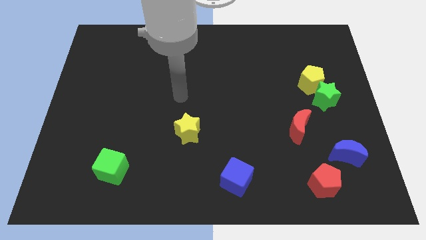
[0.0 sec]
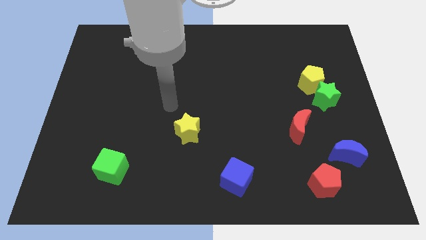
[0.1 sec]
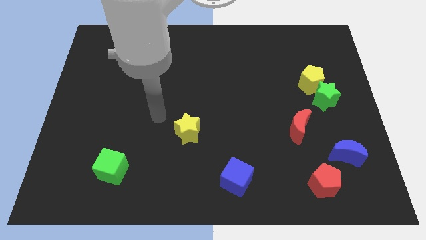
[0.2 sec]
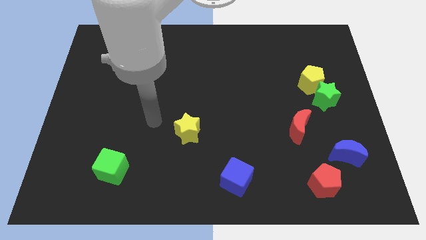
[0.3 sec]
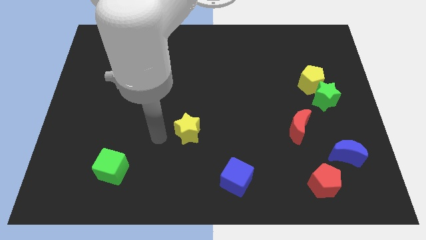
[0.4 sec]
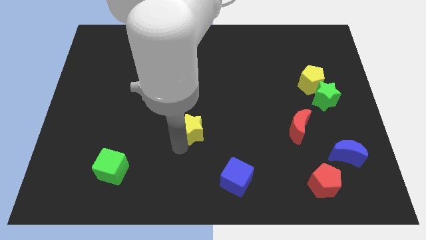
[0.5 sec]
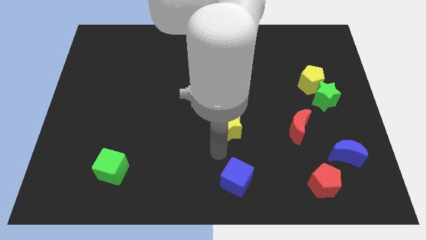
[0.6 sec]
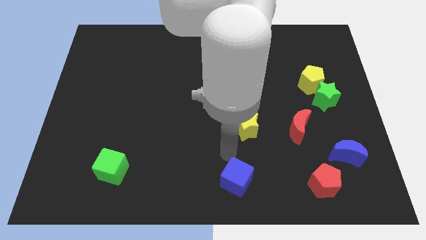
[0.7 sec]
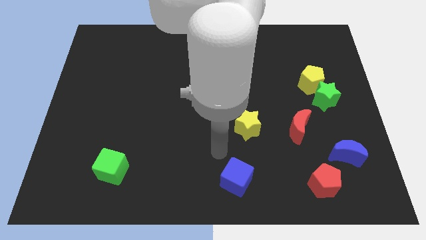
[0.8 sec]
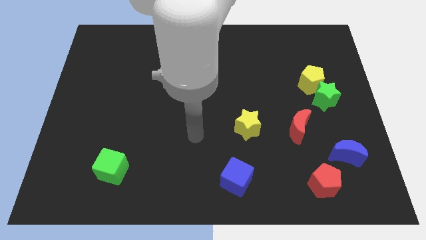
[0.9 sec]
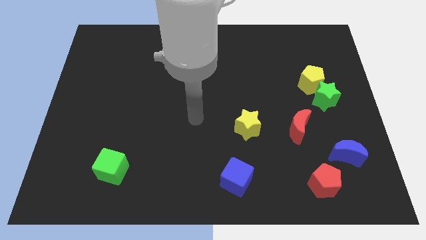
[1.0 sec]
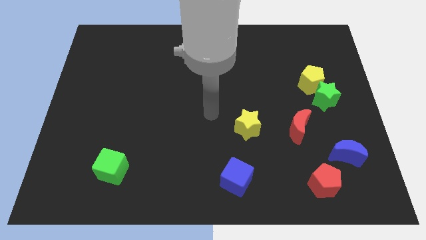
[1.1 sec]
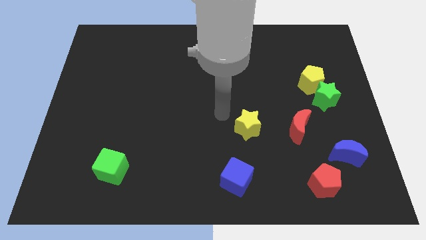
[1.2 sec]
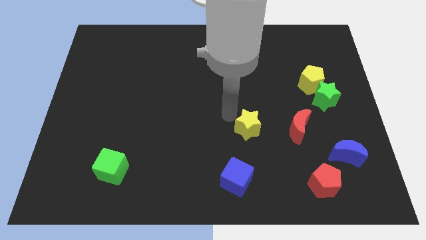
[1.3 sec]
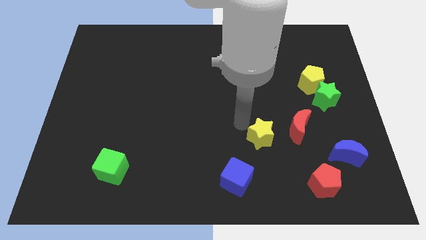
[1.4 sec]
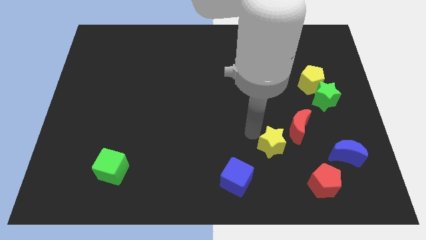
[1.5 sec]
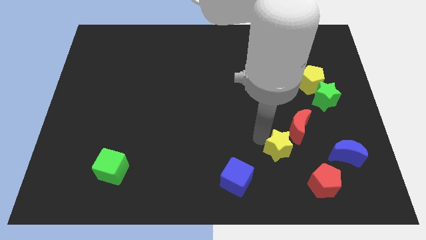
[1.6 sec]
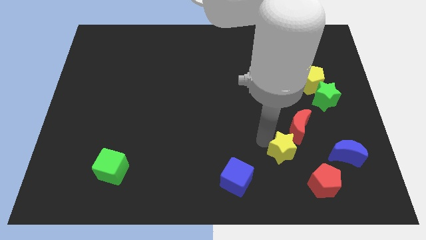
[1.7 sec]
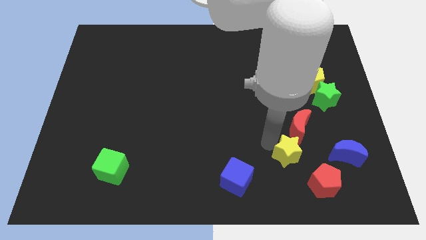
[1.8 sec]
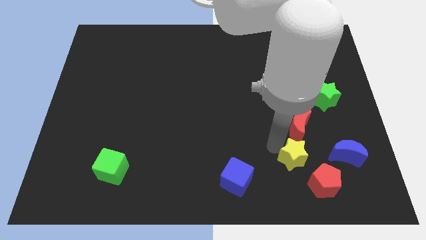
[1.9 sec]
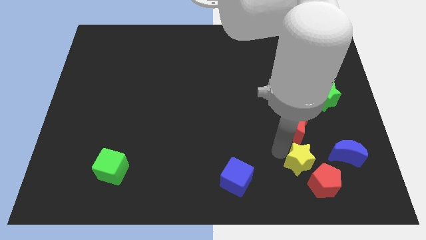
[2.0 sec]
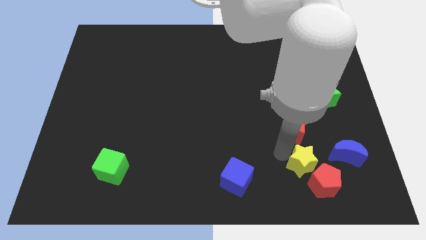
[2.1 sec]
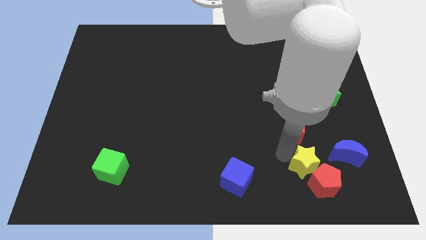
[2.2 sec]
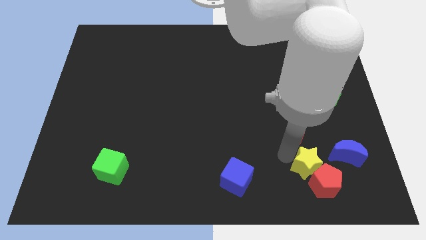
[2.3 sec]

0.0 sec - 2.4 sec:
push the yellow star to the red pentagon

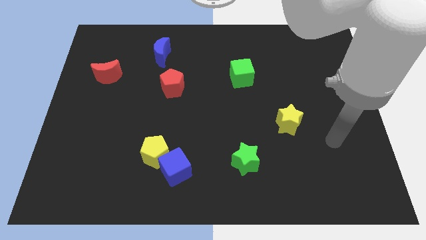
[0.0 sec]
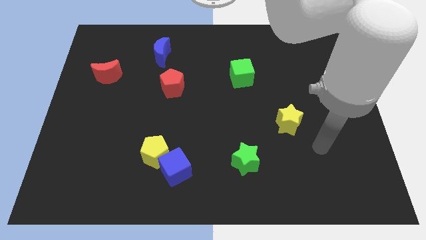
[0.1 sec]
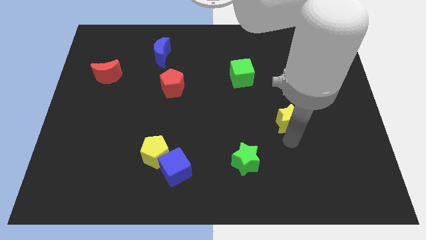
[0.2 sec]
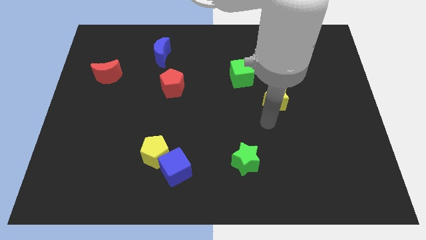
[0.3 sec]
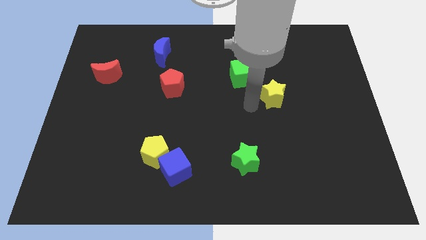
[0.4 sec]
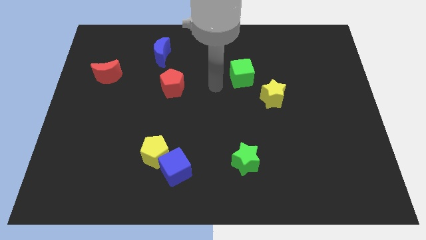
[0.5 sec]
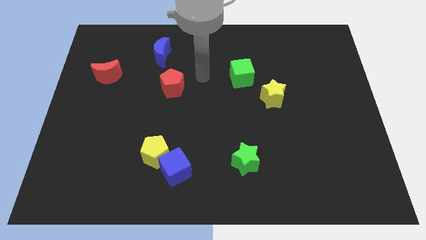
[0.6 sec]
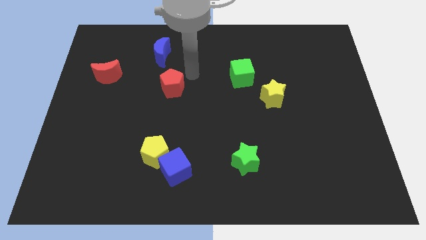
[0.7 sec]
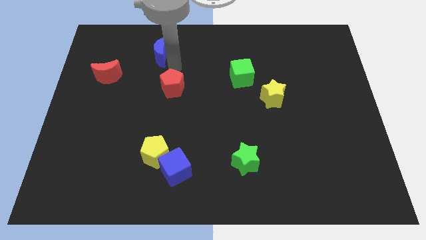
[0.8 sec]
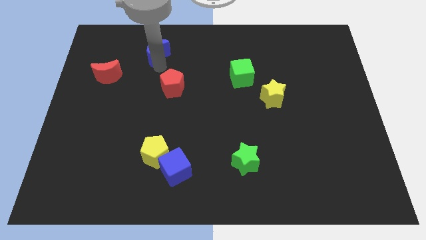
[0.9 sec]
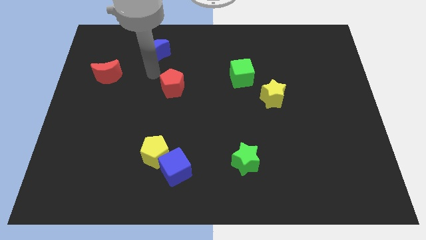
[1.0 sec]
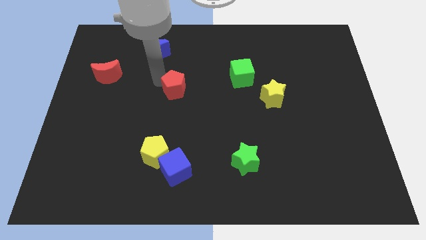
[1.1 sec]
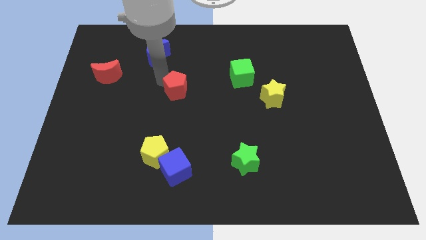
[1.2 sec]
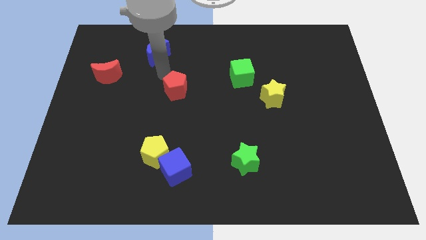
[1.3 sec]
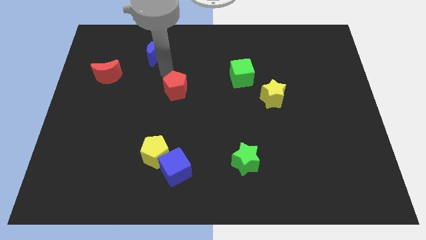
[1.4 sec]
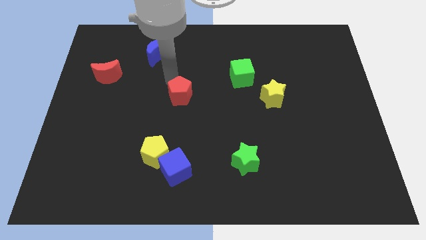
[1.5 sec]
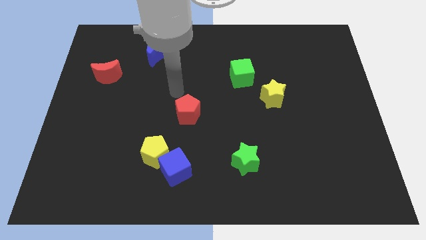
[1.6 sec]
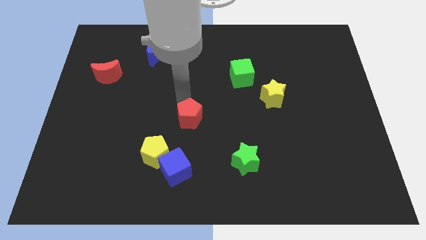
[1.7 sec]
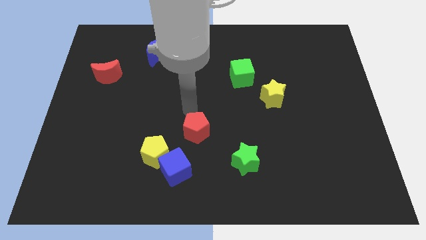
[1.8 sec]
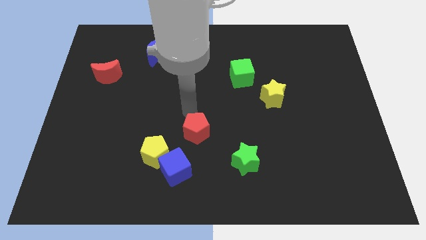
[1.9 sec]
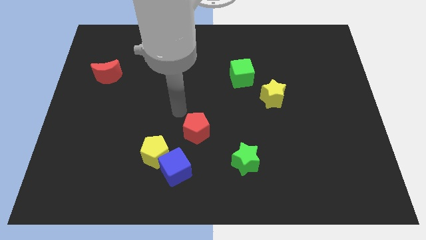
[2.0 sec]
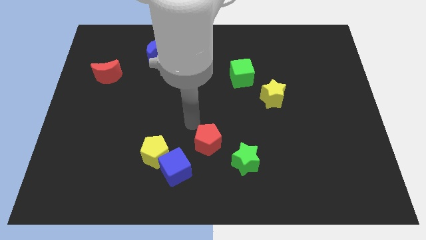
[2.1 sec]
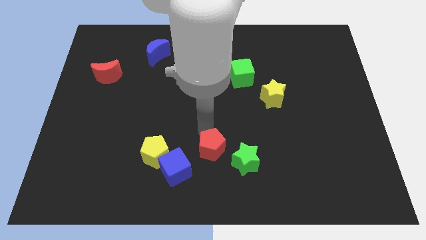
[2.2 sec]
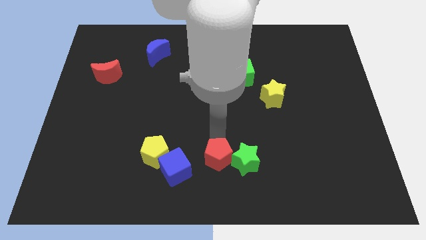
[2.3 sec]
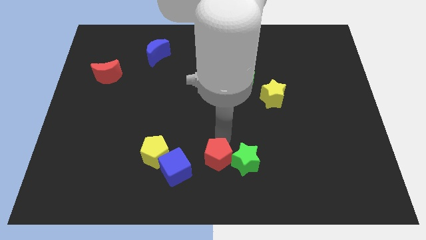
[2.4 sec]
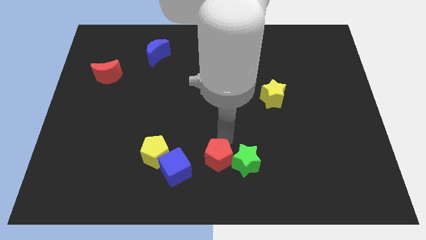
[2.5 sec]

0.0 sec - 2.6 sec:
push the red pentagon next to the green star

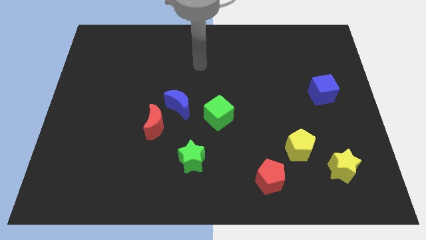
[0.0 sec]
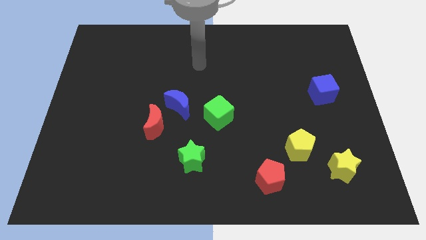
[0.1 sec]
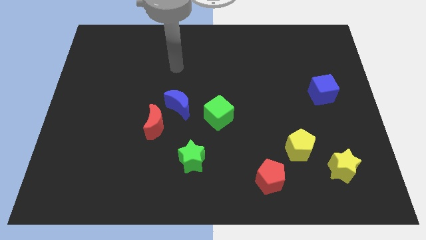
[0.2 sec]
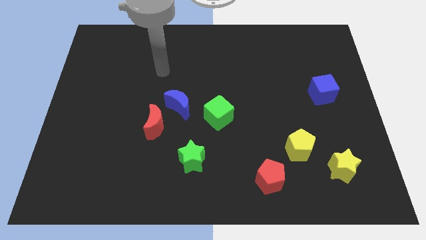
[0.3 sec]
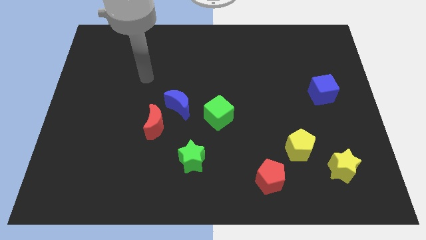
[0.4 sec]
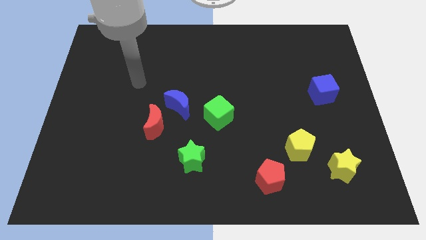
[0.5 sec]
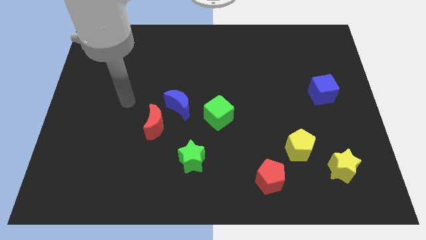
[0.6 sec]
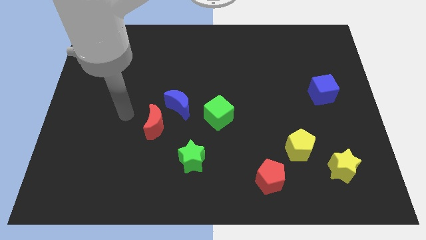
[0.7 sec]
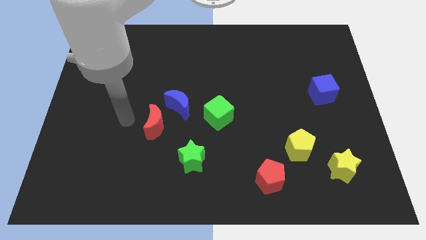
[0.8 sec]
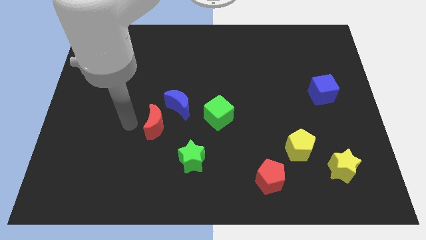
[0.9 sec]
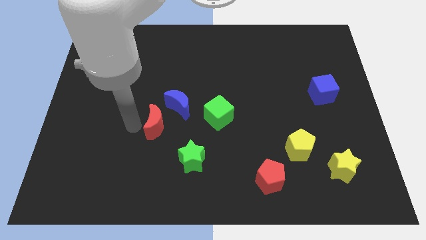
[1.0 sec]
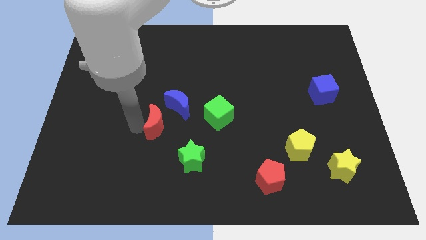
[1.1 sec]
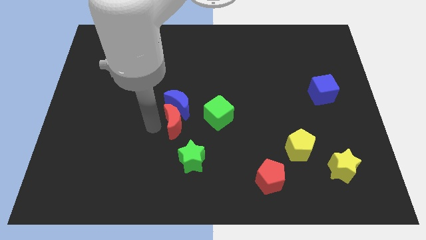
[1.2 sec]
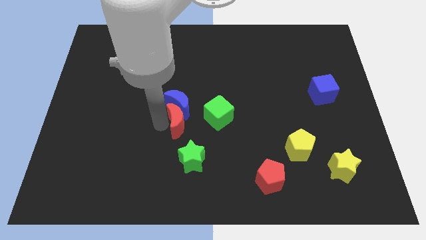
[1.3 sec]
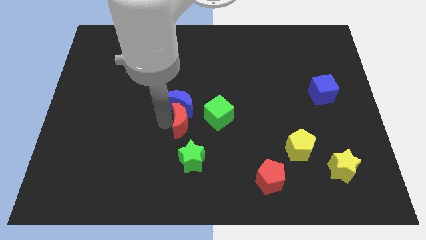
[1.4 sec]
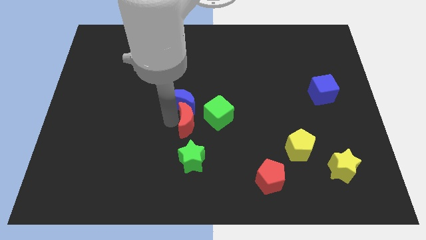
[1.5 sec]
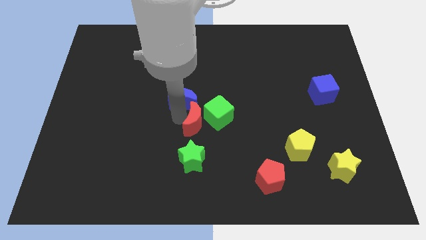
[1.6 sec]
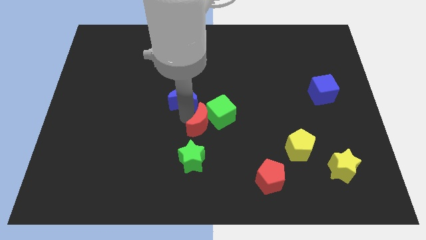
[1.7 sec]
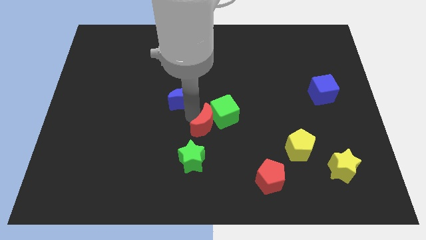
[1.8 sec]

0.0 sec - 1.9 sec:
push the red moon close to the green cube

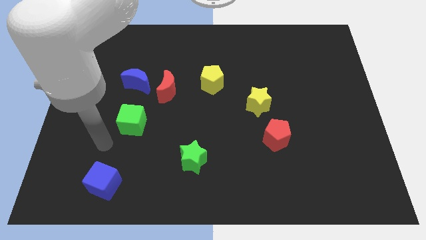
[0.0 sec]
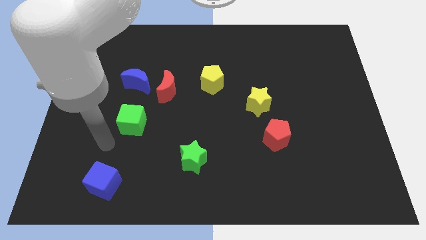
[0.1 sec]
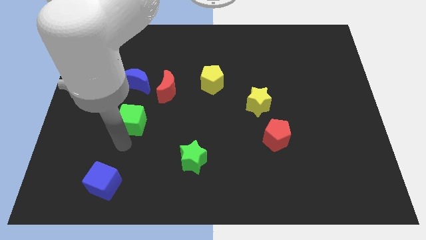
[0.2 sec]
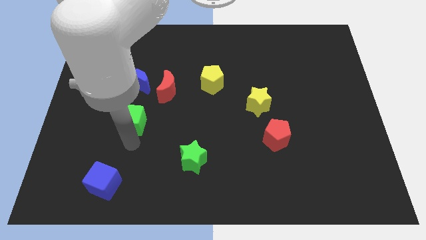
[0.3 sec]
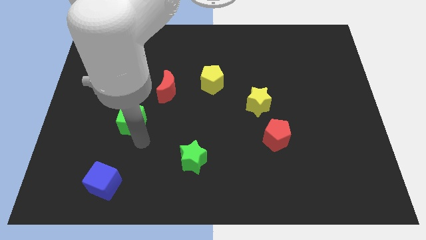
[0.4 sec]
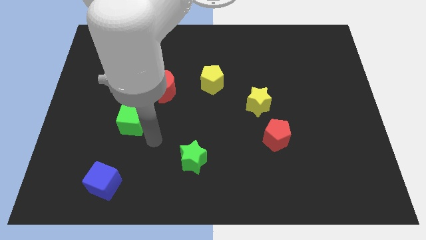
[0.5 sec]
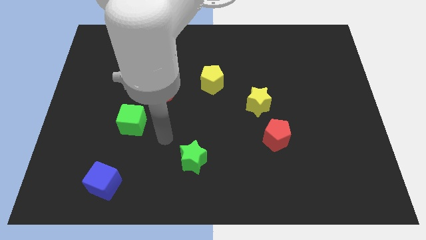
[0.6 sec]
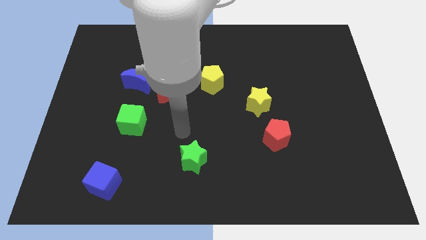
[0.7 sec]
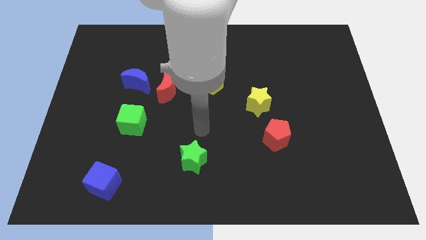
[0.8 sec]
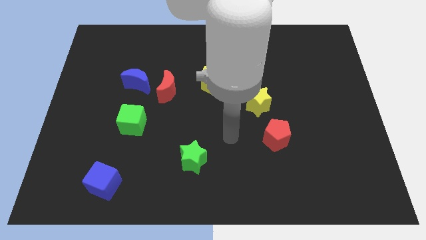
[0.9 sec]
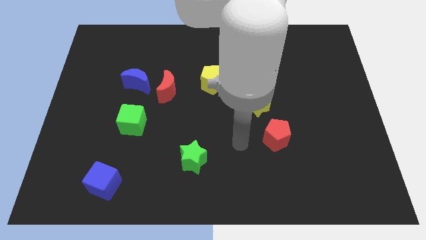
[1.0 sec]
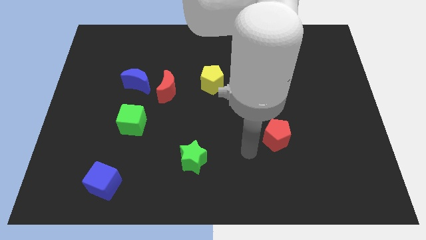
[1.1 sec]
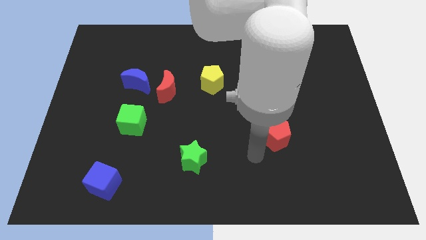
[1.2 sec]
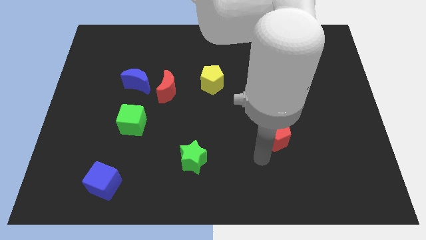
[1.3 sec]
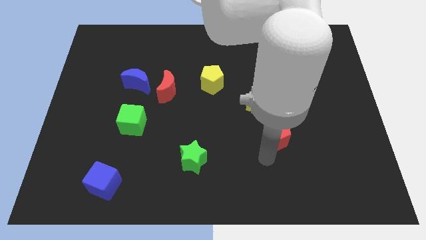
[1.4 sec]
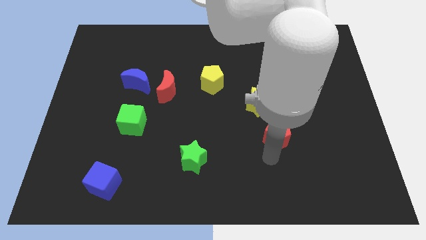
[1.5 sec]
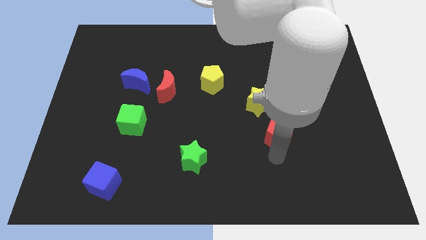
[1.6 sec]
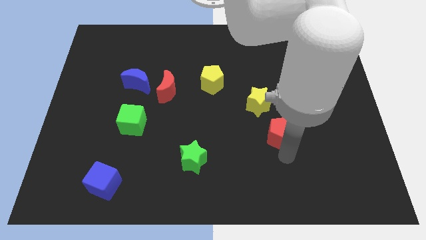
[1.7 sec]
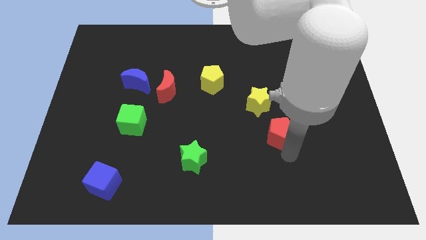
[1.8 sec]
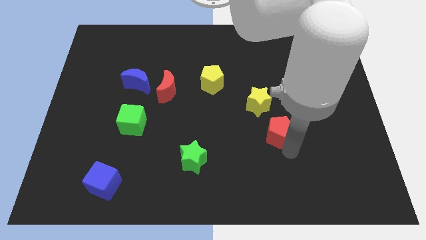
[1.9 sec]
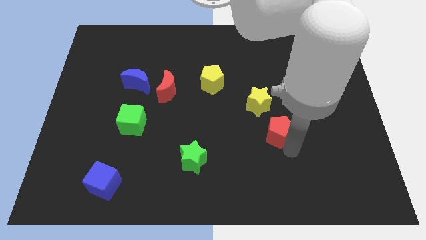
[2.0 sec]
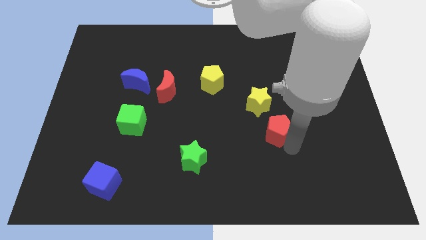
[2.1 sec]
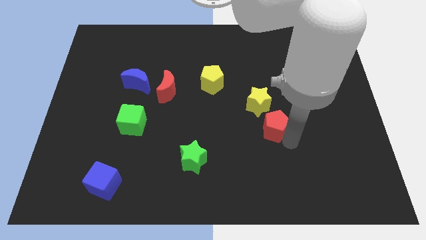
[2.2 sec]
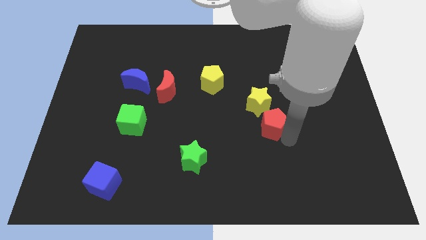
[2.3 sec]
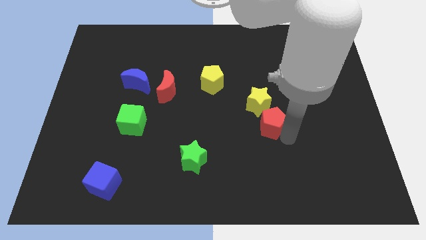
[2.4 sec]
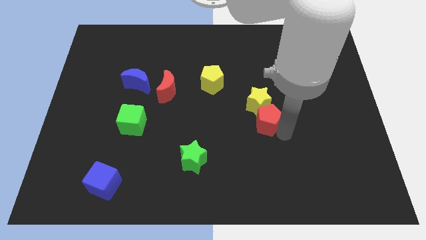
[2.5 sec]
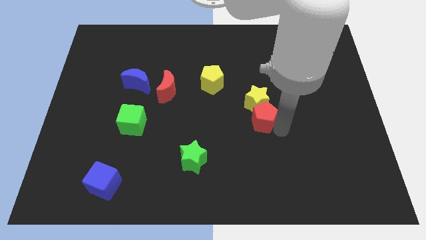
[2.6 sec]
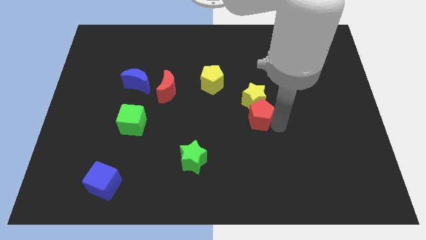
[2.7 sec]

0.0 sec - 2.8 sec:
push the red pentagon next to the yellow star
